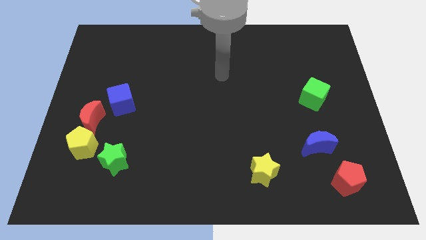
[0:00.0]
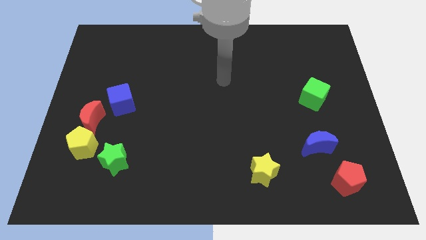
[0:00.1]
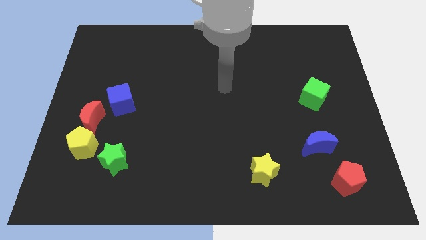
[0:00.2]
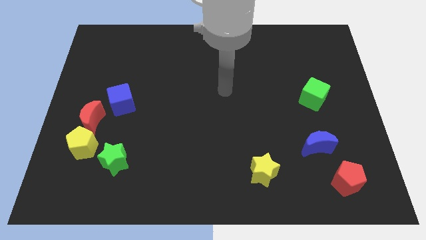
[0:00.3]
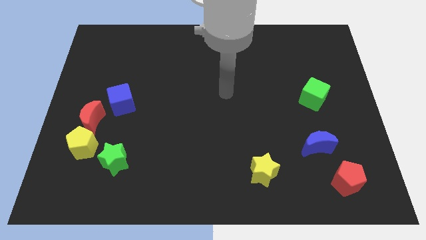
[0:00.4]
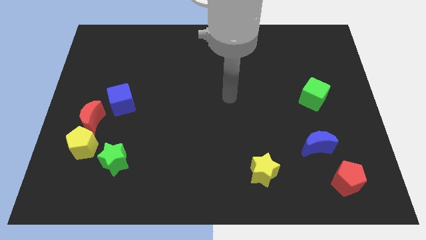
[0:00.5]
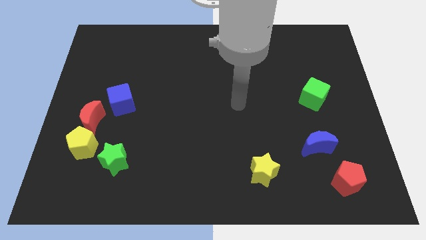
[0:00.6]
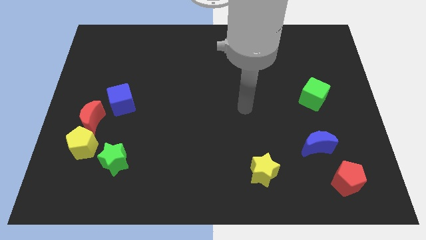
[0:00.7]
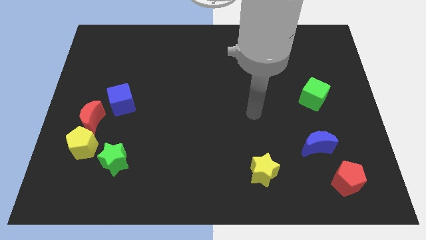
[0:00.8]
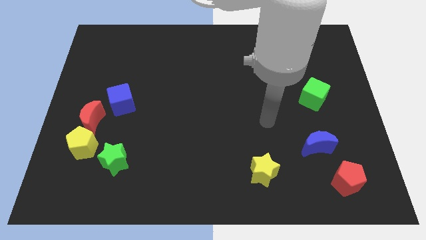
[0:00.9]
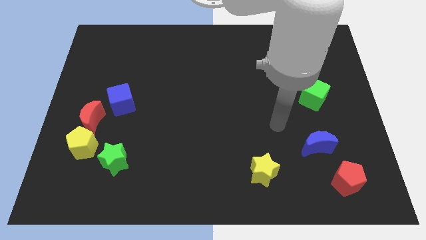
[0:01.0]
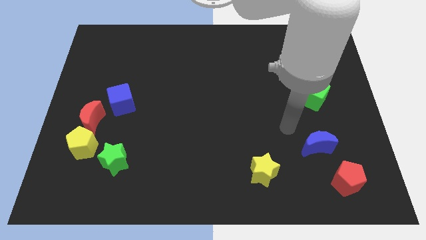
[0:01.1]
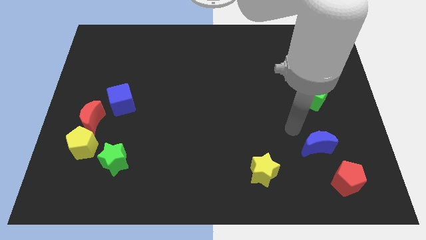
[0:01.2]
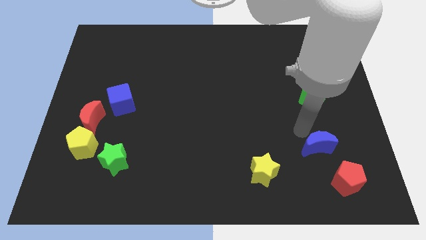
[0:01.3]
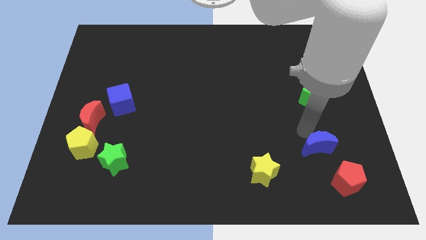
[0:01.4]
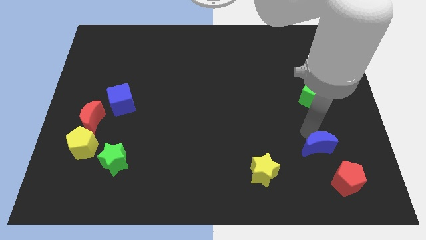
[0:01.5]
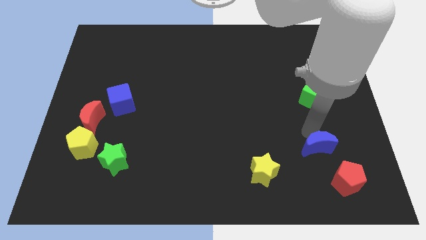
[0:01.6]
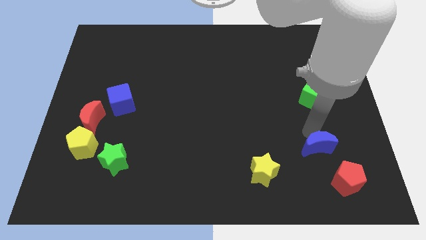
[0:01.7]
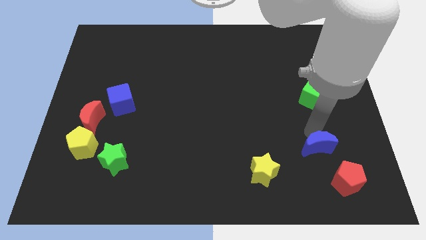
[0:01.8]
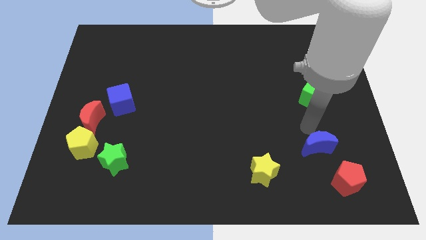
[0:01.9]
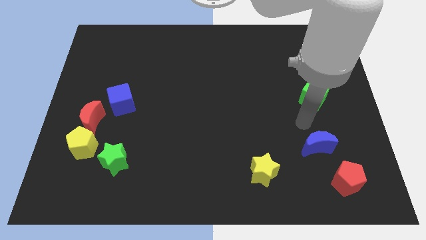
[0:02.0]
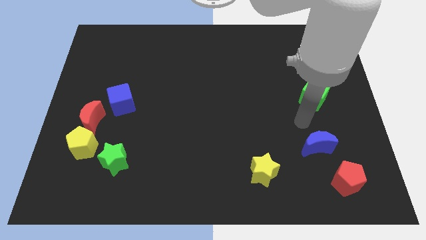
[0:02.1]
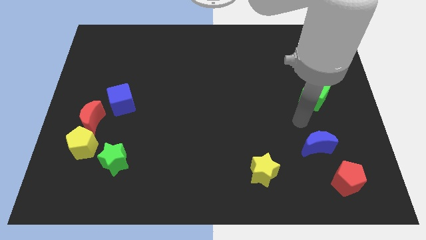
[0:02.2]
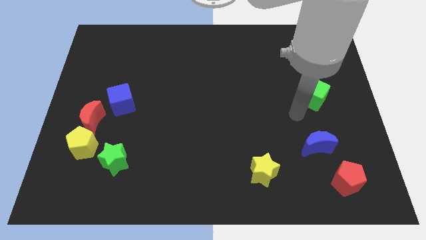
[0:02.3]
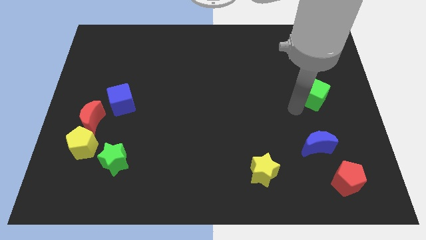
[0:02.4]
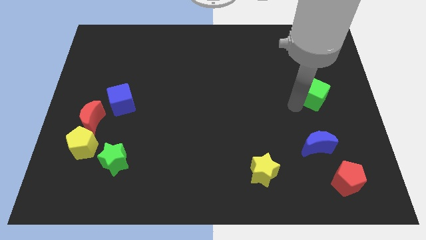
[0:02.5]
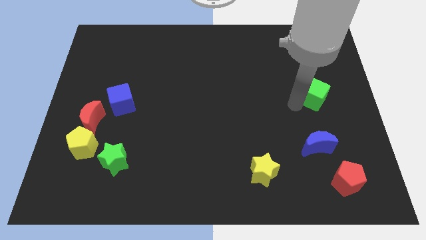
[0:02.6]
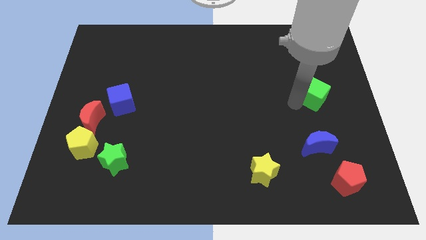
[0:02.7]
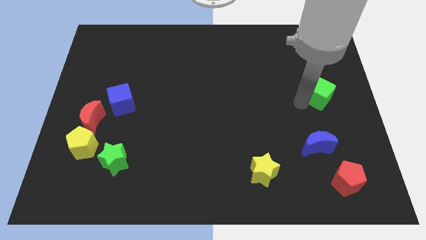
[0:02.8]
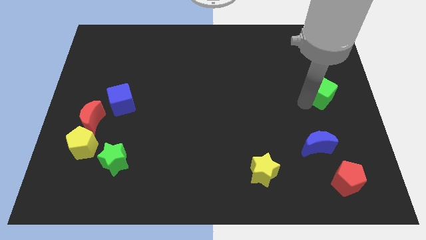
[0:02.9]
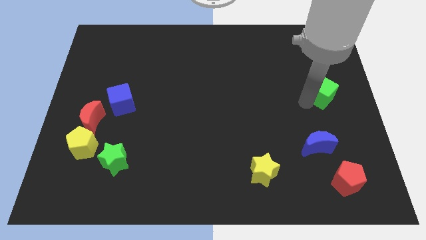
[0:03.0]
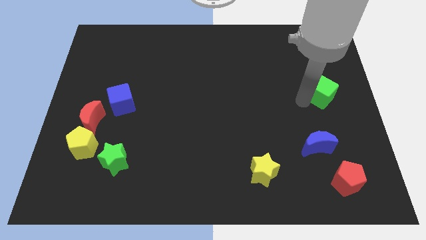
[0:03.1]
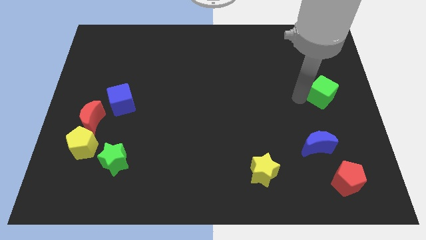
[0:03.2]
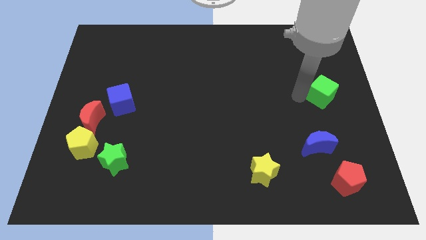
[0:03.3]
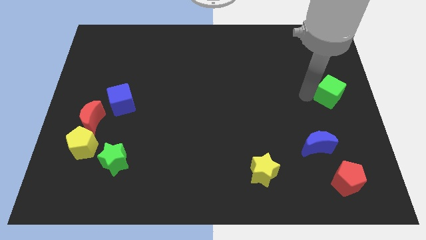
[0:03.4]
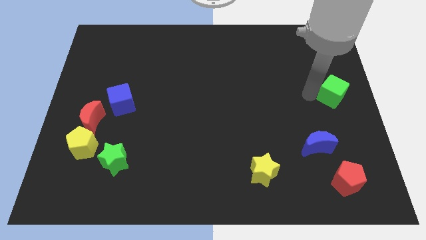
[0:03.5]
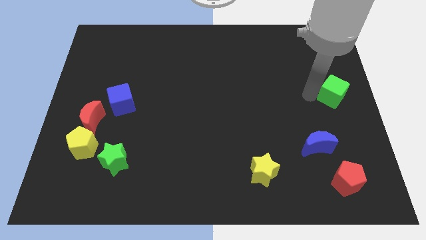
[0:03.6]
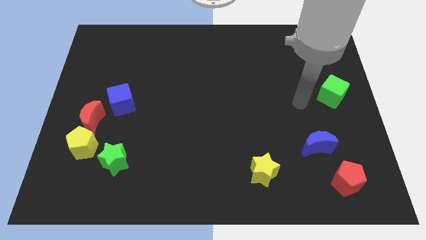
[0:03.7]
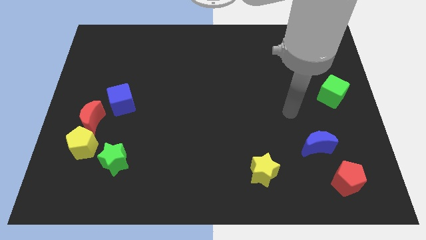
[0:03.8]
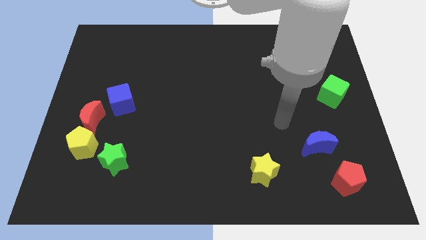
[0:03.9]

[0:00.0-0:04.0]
push green cube towards right side of the board

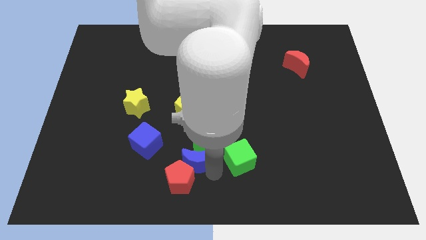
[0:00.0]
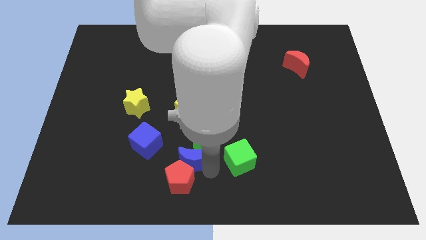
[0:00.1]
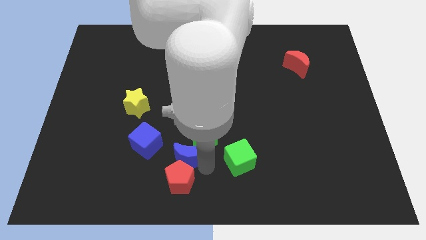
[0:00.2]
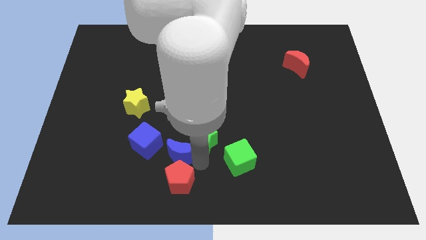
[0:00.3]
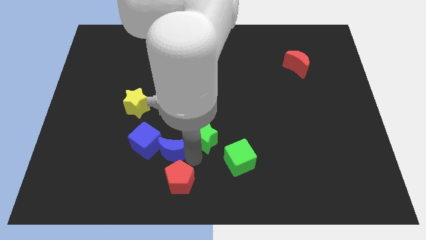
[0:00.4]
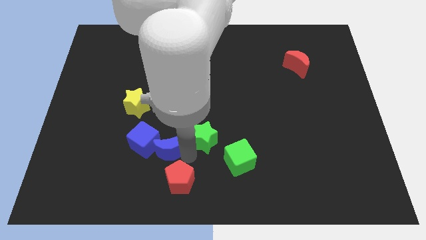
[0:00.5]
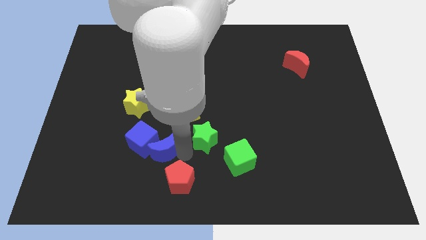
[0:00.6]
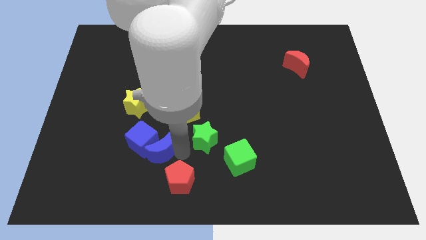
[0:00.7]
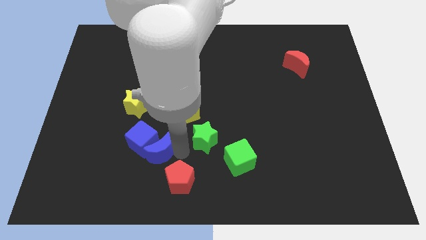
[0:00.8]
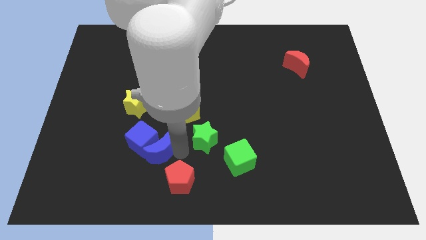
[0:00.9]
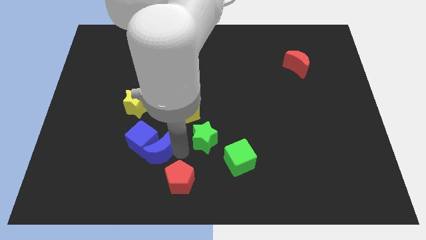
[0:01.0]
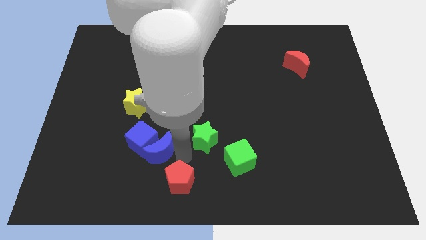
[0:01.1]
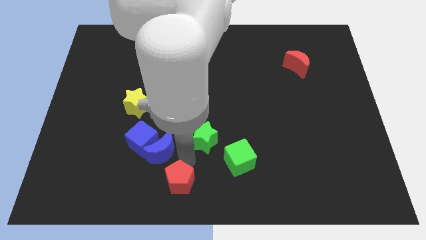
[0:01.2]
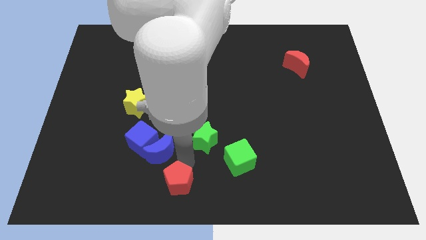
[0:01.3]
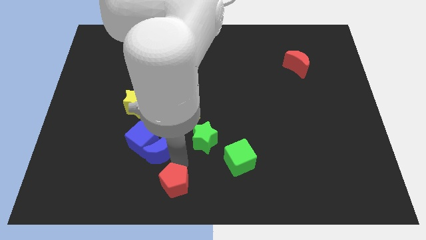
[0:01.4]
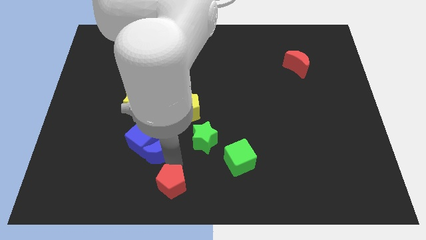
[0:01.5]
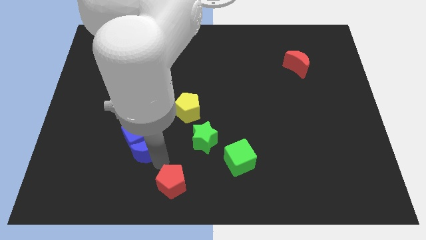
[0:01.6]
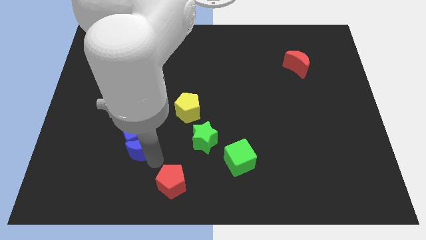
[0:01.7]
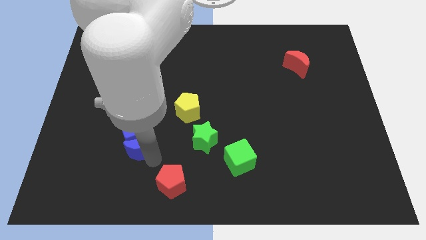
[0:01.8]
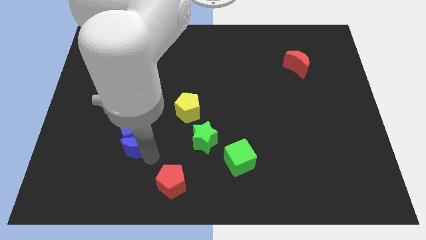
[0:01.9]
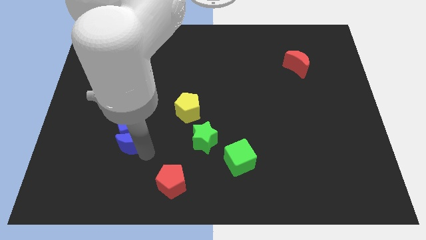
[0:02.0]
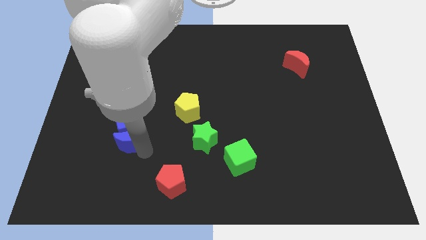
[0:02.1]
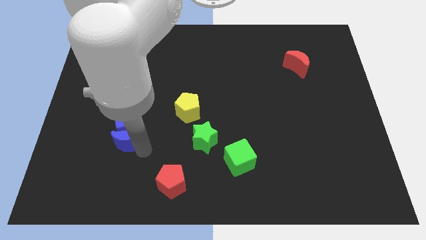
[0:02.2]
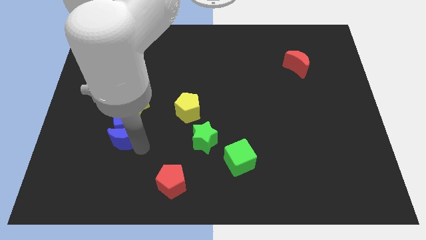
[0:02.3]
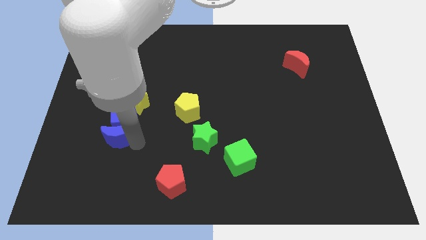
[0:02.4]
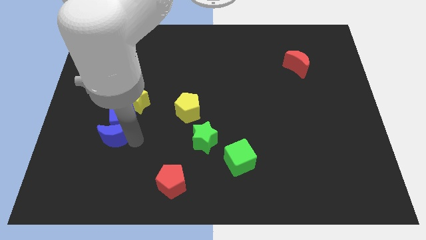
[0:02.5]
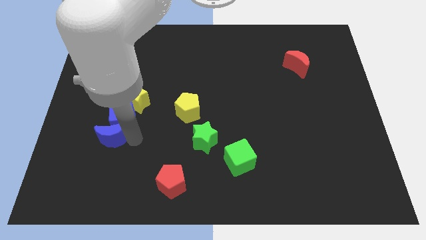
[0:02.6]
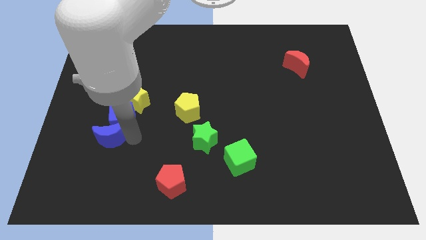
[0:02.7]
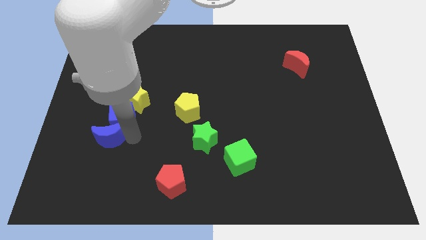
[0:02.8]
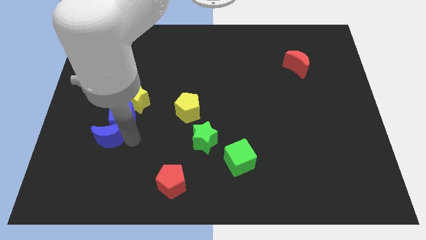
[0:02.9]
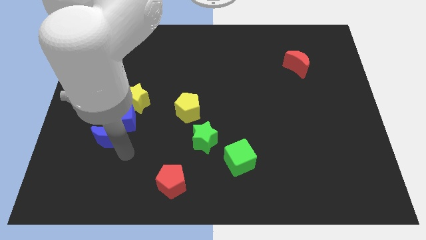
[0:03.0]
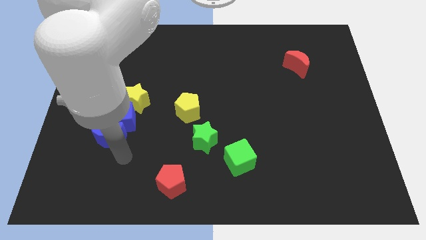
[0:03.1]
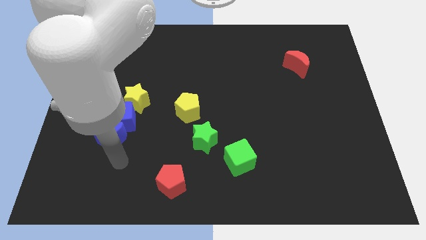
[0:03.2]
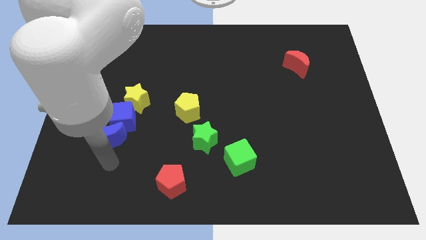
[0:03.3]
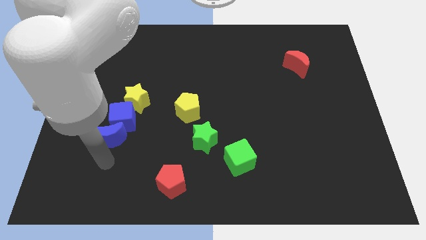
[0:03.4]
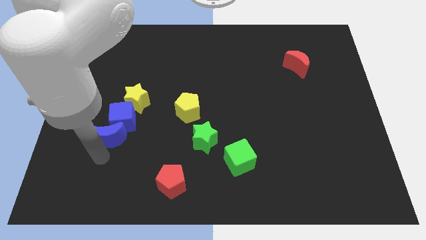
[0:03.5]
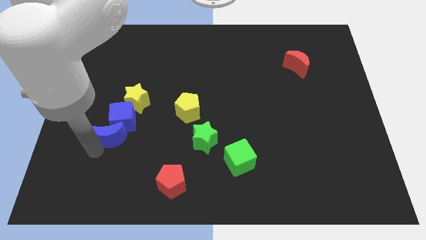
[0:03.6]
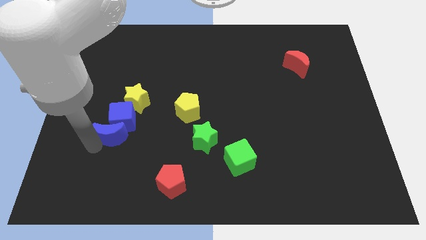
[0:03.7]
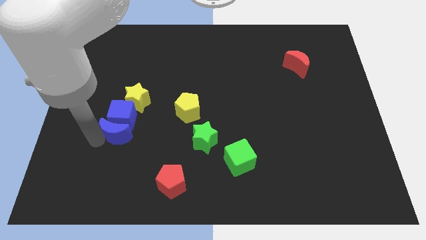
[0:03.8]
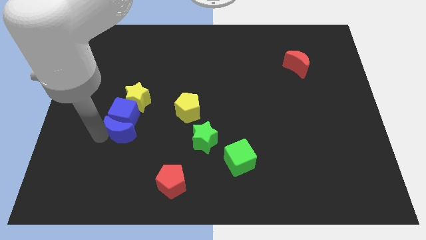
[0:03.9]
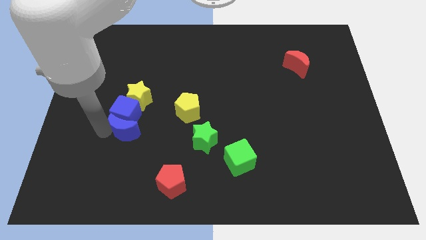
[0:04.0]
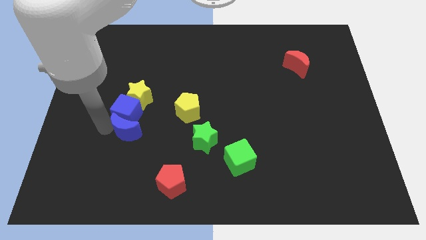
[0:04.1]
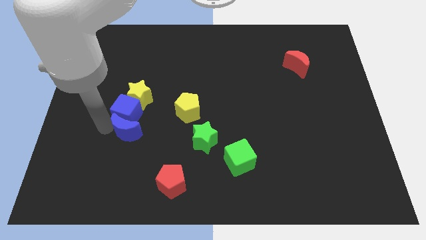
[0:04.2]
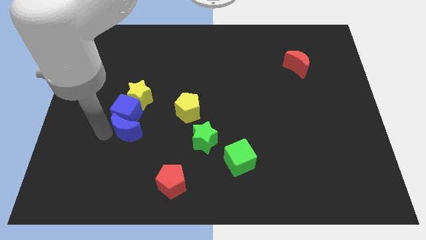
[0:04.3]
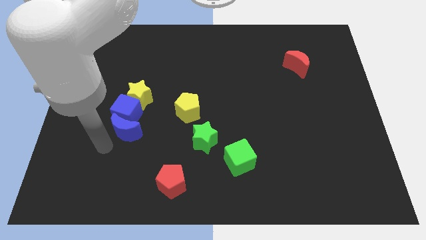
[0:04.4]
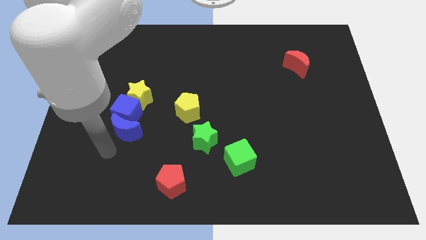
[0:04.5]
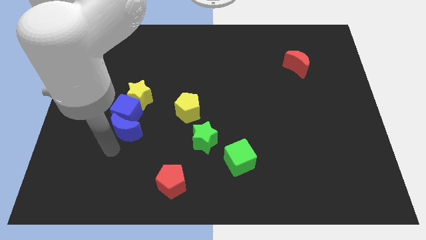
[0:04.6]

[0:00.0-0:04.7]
push the blue crescent and cube into the yellow star

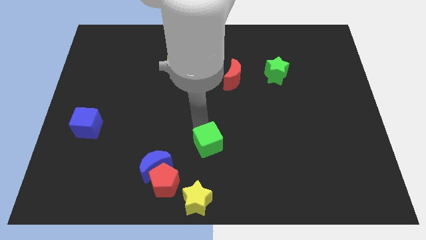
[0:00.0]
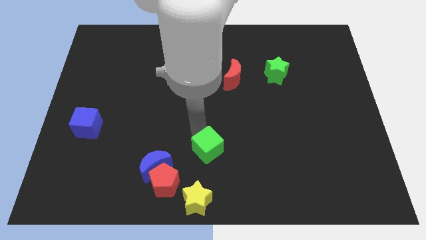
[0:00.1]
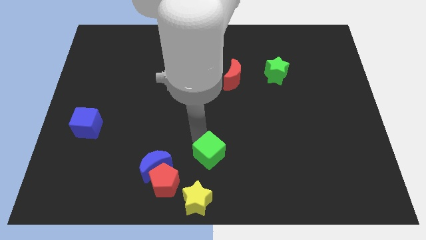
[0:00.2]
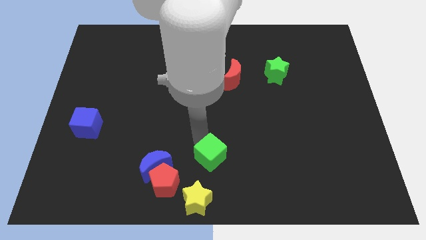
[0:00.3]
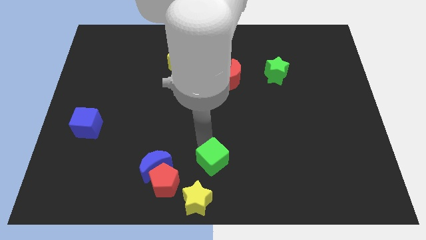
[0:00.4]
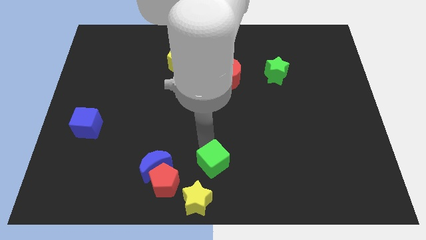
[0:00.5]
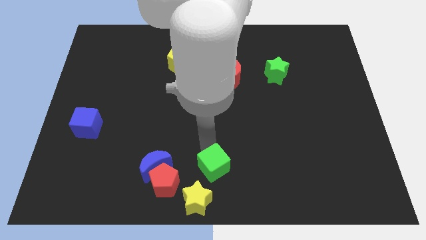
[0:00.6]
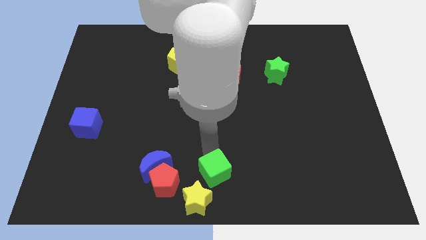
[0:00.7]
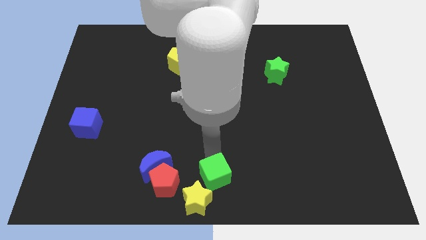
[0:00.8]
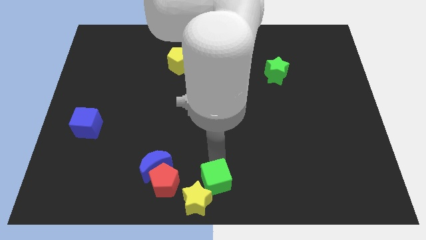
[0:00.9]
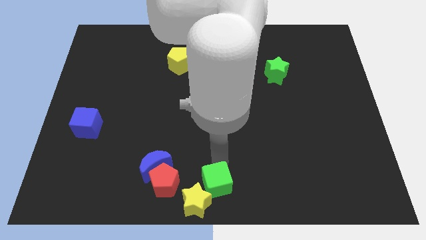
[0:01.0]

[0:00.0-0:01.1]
slide green cube into yellow star
